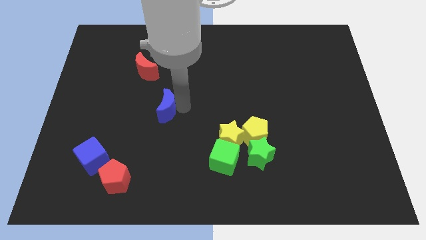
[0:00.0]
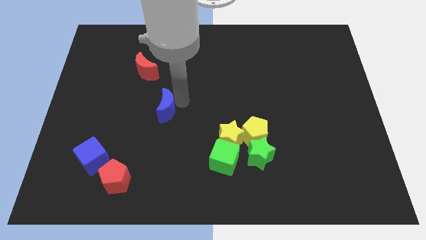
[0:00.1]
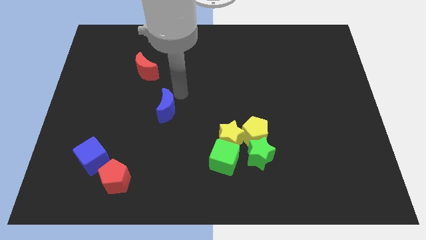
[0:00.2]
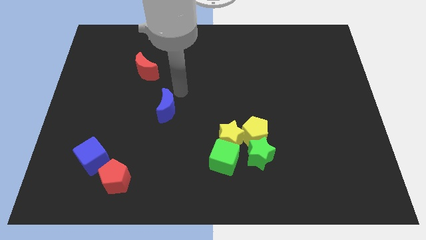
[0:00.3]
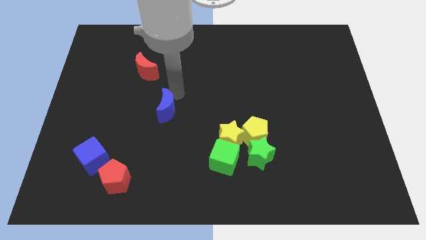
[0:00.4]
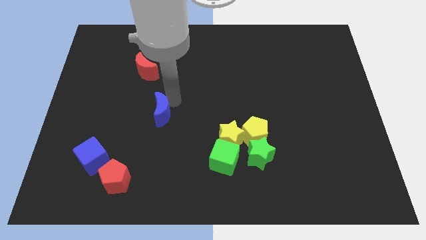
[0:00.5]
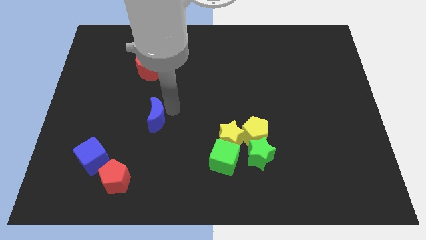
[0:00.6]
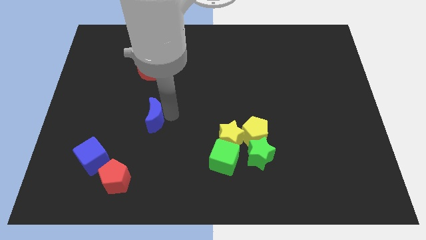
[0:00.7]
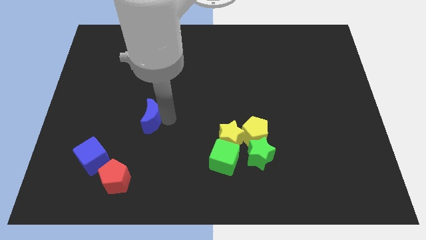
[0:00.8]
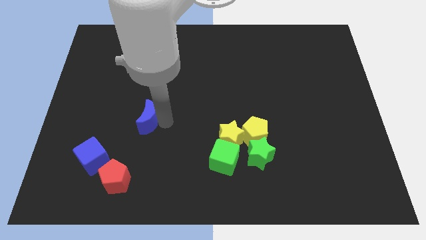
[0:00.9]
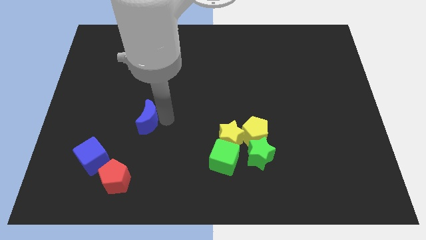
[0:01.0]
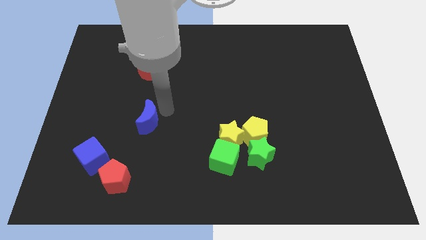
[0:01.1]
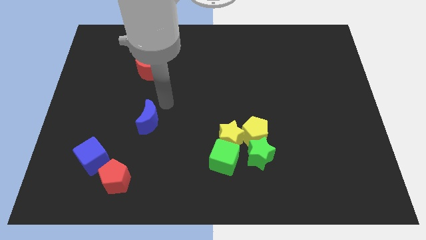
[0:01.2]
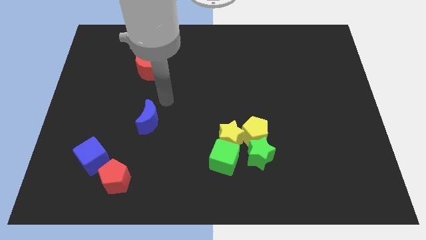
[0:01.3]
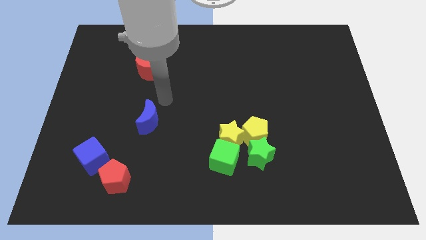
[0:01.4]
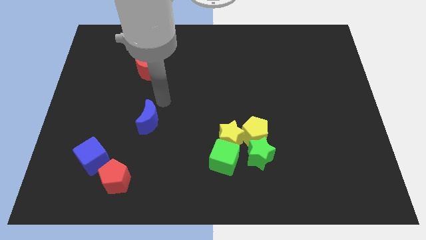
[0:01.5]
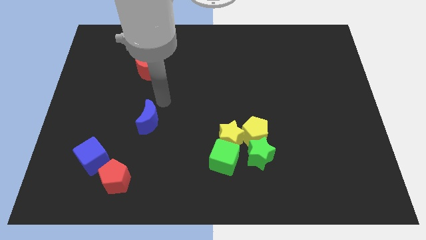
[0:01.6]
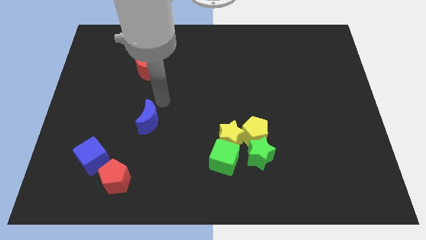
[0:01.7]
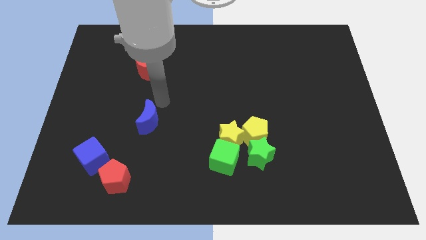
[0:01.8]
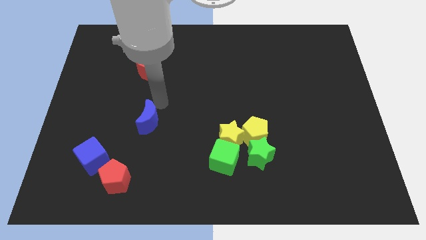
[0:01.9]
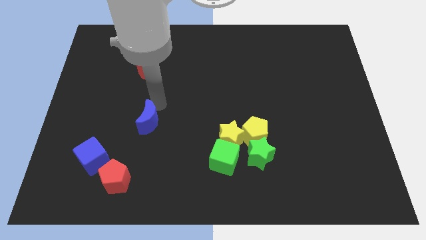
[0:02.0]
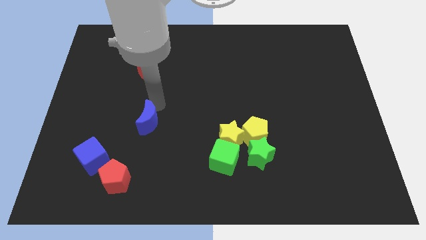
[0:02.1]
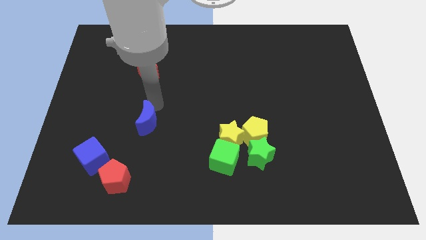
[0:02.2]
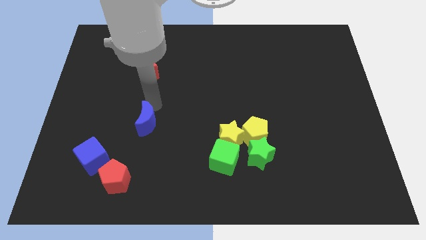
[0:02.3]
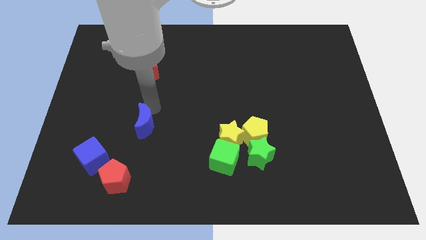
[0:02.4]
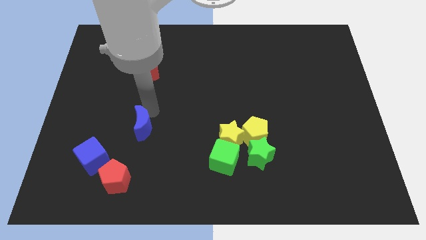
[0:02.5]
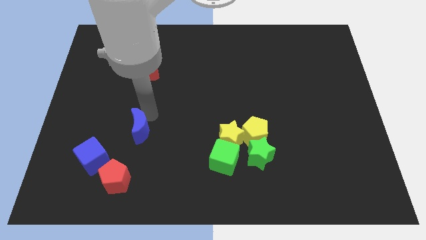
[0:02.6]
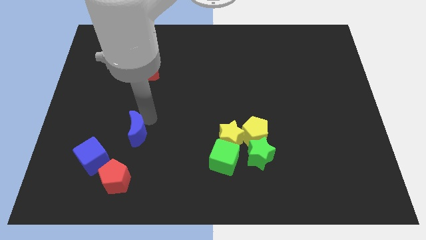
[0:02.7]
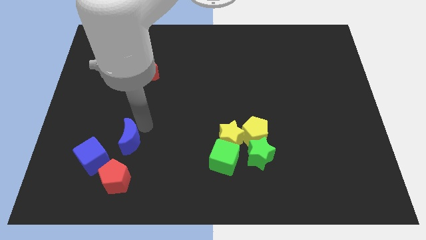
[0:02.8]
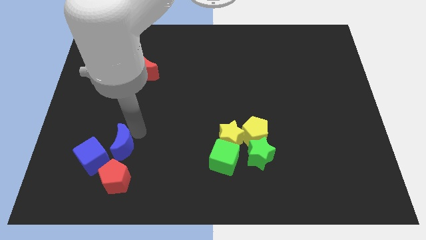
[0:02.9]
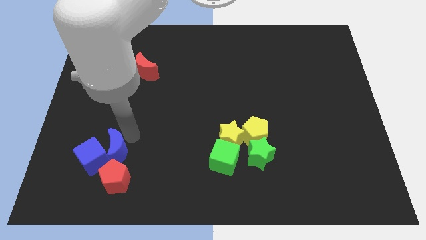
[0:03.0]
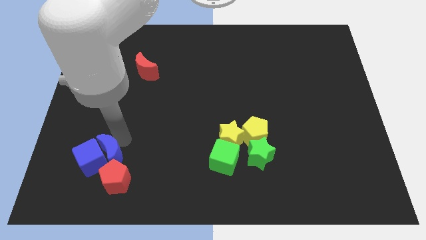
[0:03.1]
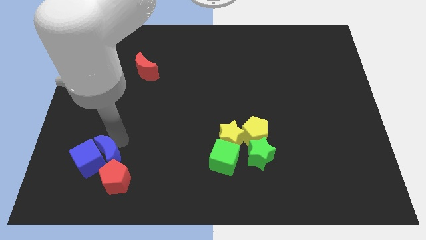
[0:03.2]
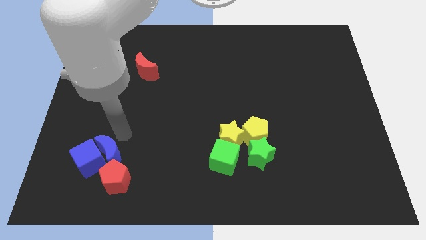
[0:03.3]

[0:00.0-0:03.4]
push the blue crescent into the blue cube

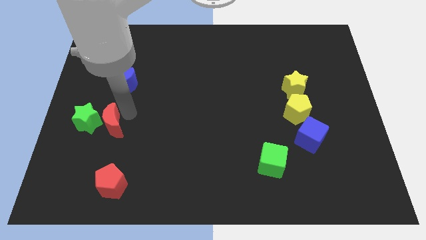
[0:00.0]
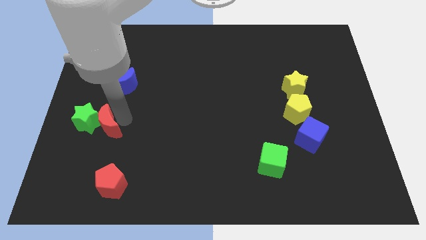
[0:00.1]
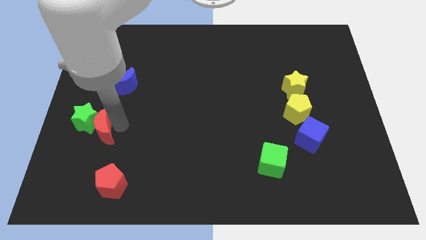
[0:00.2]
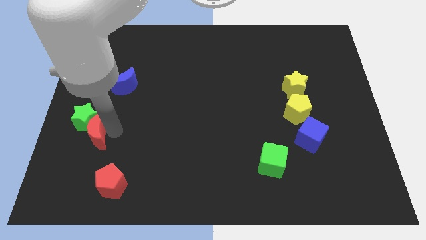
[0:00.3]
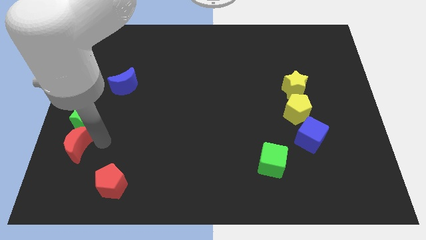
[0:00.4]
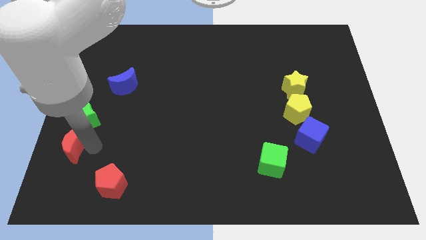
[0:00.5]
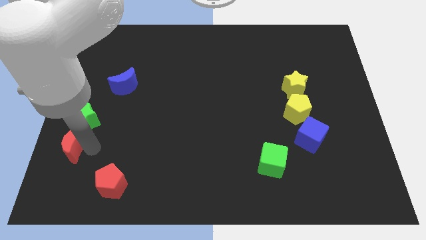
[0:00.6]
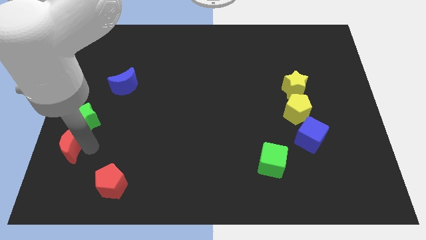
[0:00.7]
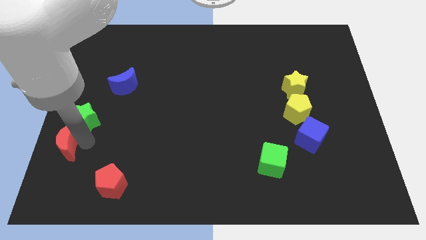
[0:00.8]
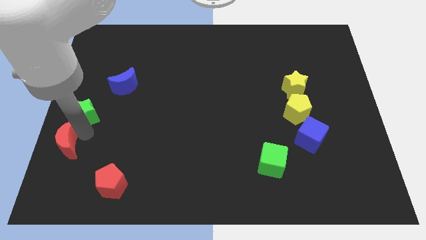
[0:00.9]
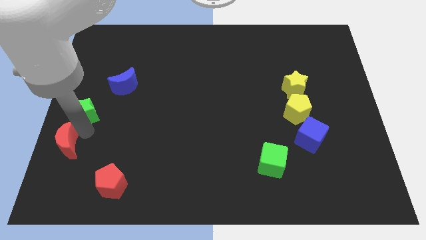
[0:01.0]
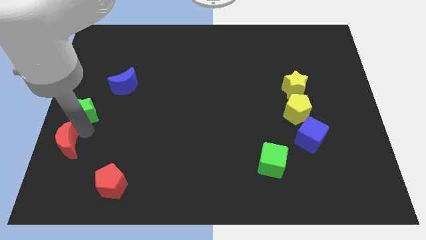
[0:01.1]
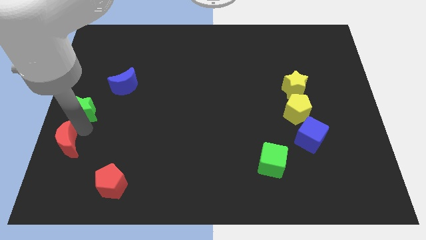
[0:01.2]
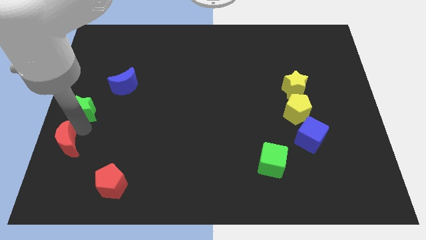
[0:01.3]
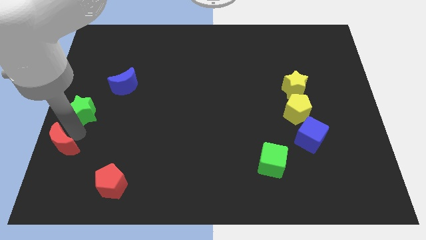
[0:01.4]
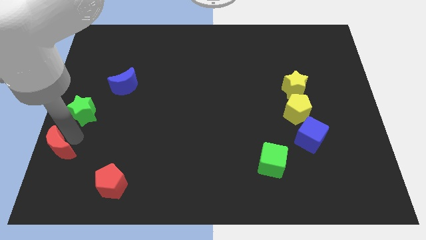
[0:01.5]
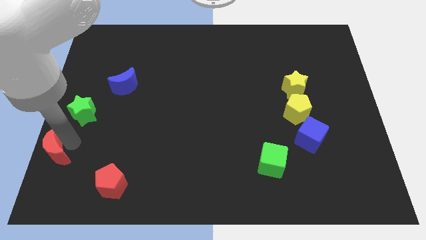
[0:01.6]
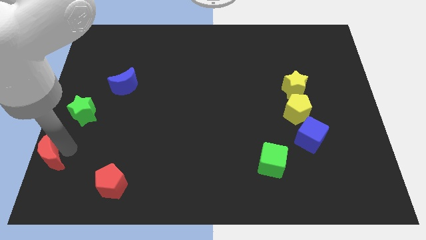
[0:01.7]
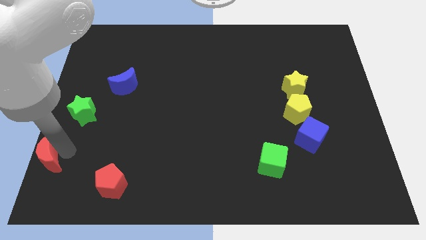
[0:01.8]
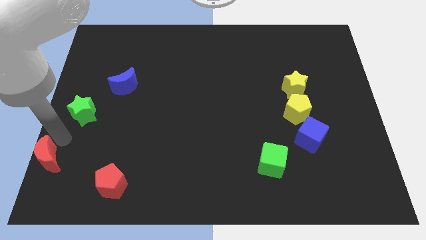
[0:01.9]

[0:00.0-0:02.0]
separate the red crescent from green star

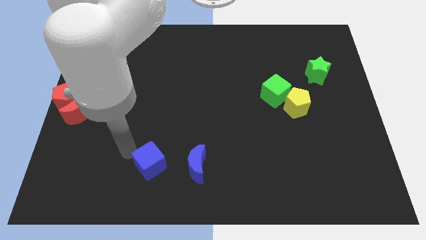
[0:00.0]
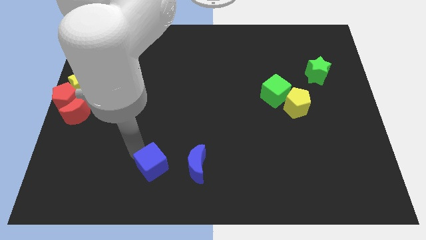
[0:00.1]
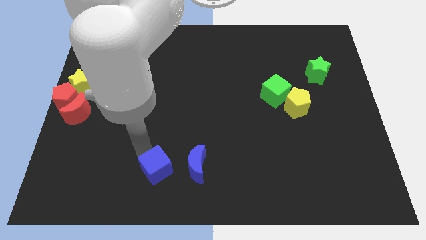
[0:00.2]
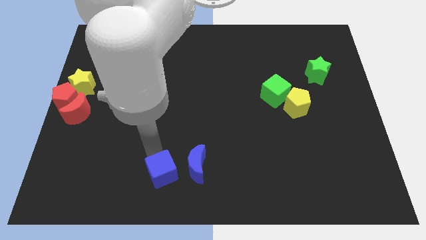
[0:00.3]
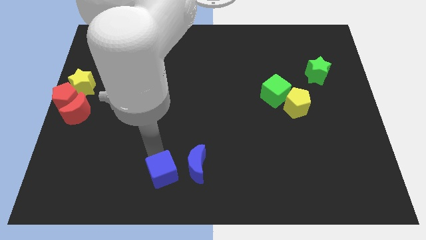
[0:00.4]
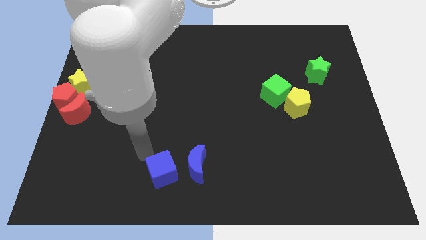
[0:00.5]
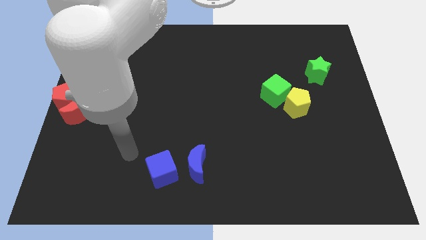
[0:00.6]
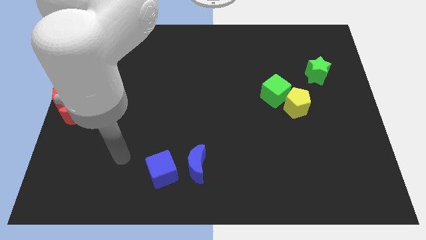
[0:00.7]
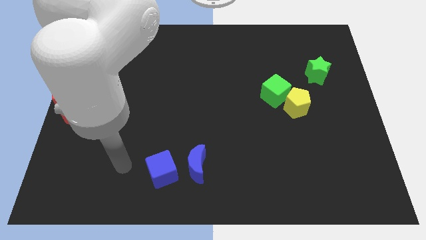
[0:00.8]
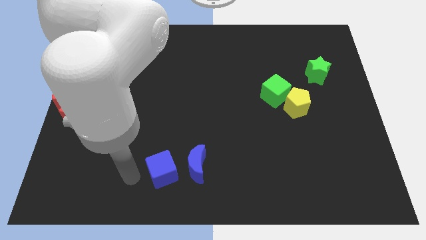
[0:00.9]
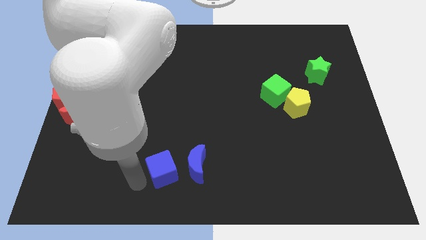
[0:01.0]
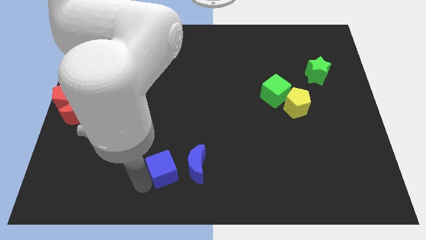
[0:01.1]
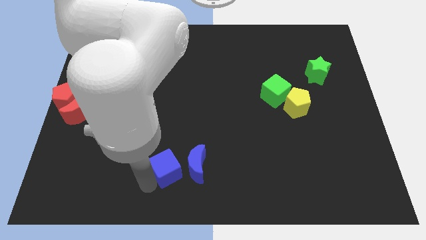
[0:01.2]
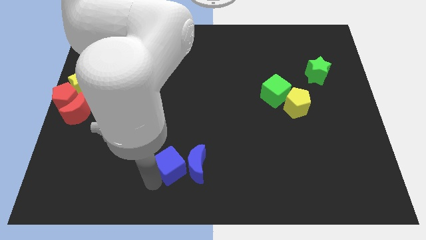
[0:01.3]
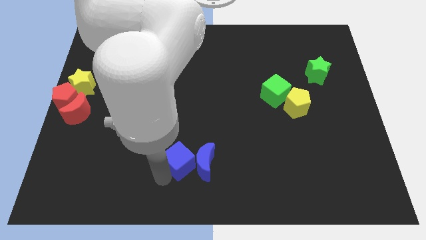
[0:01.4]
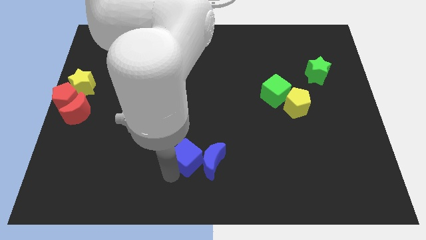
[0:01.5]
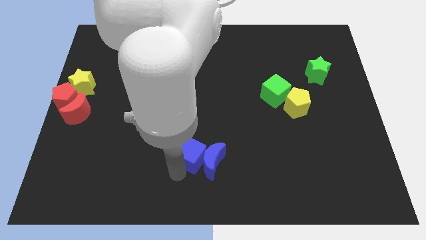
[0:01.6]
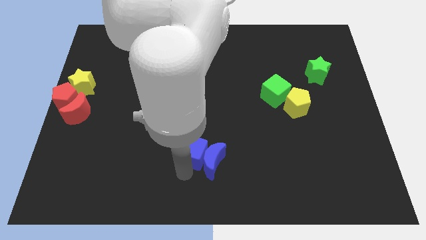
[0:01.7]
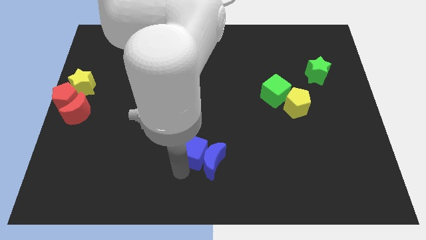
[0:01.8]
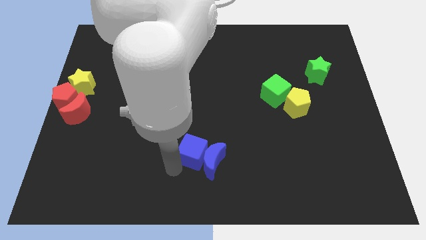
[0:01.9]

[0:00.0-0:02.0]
push the blue cube closer to the blue moon

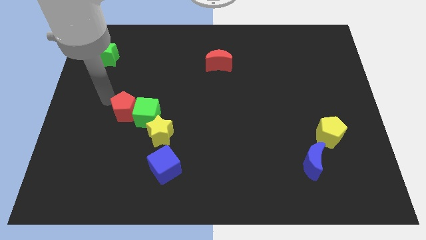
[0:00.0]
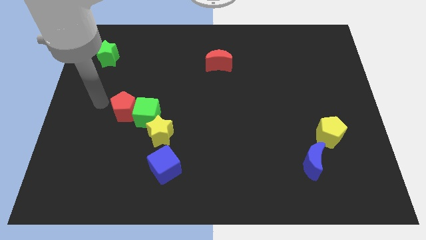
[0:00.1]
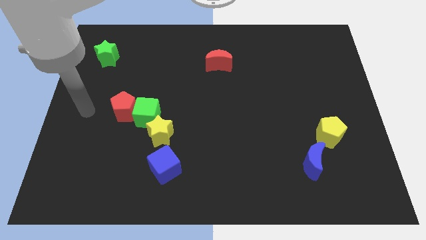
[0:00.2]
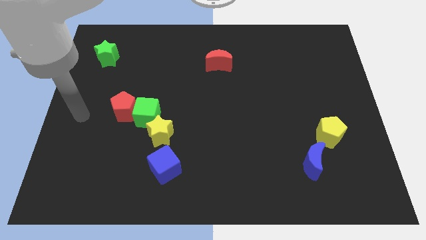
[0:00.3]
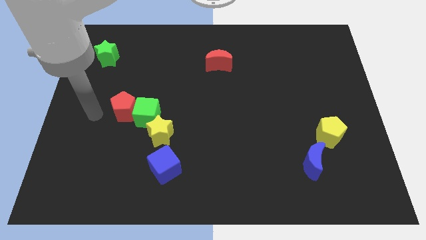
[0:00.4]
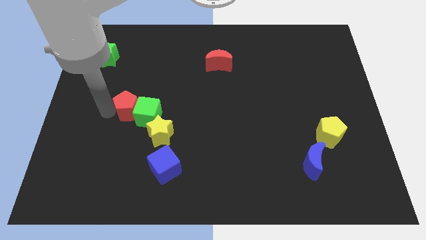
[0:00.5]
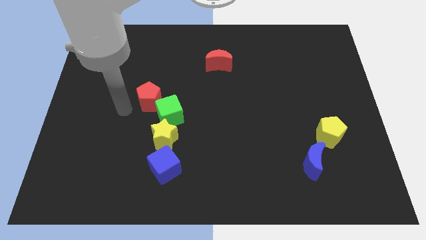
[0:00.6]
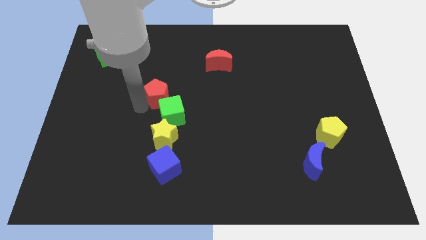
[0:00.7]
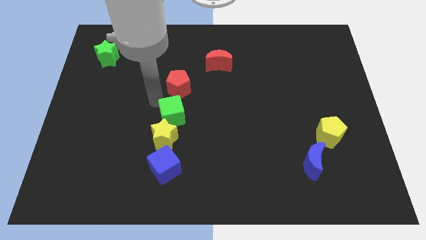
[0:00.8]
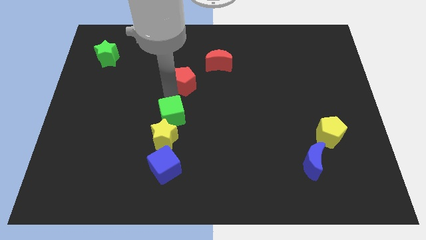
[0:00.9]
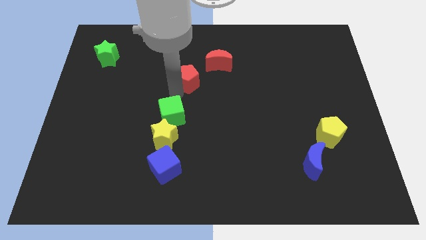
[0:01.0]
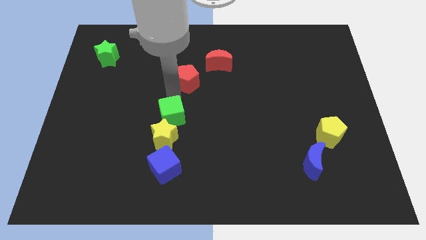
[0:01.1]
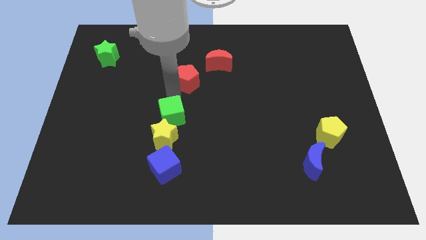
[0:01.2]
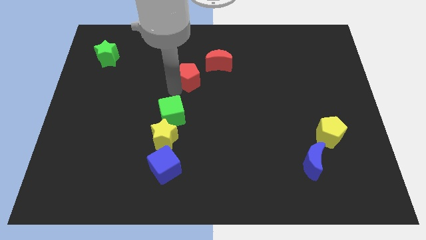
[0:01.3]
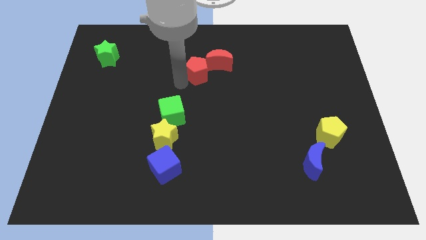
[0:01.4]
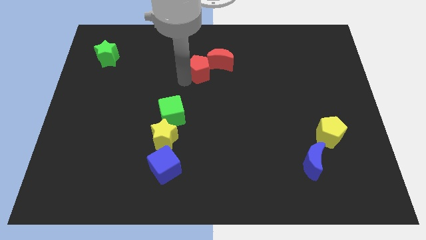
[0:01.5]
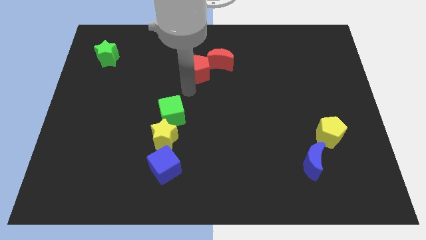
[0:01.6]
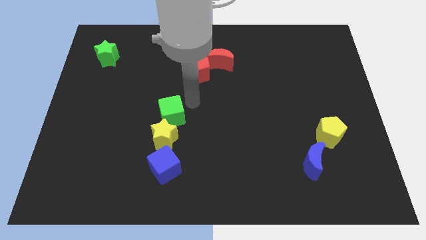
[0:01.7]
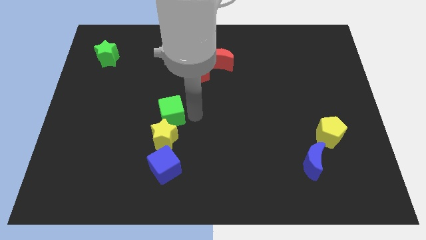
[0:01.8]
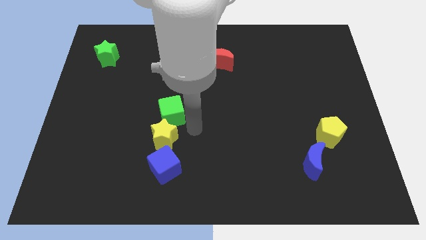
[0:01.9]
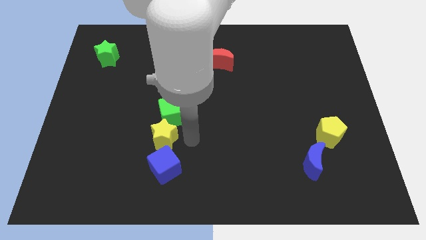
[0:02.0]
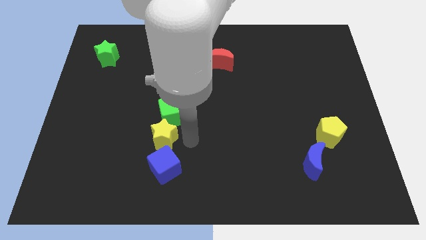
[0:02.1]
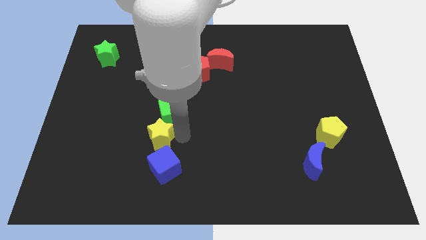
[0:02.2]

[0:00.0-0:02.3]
push the red pentagon into the red moon
